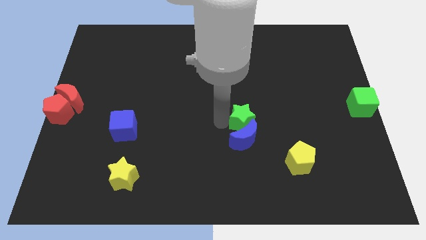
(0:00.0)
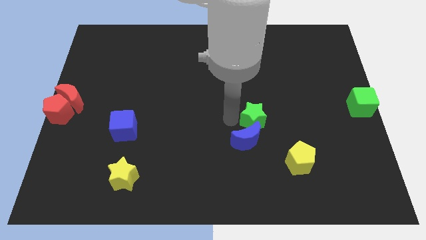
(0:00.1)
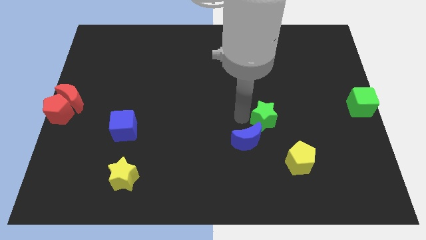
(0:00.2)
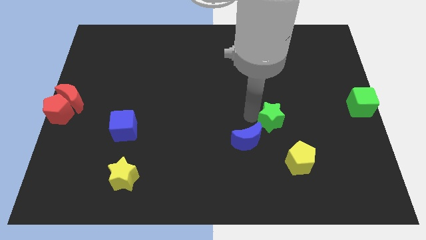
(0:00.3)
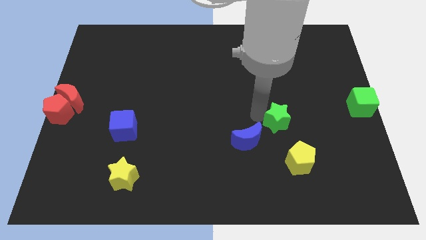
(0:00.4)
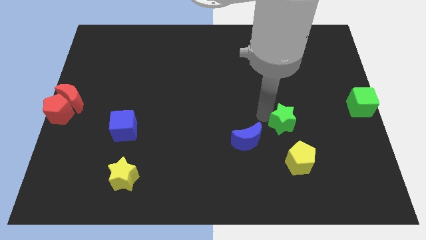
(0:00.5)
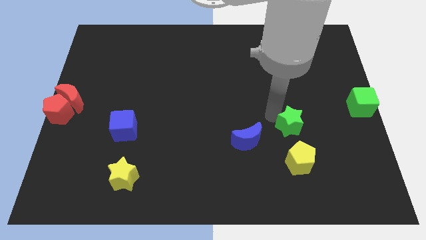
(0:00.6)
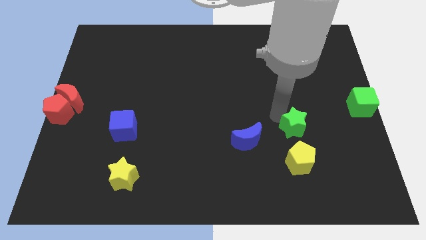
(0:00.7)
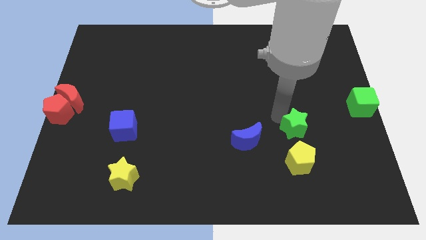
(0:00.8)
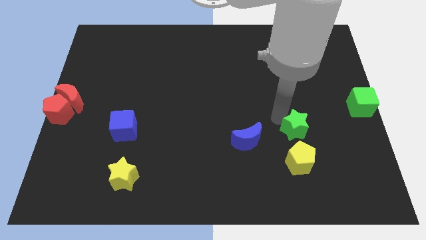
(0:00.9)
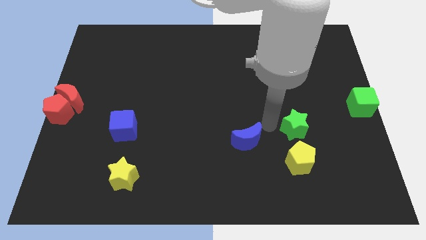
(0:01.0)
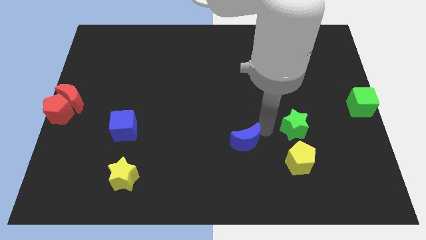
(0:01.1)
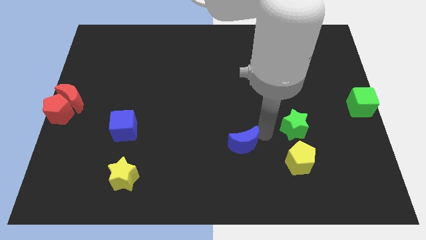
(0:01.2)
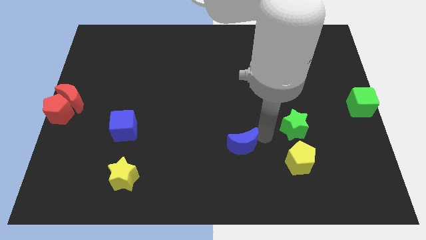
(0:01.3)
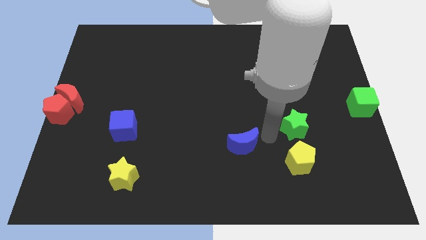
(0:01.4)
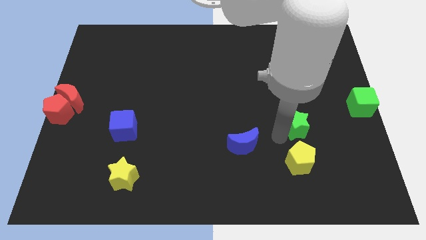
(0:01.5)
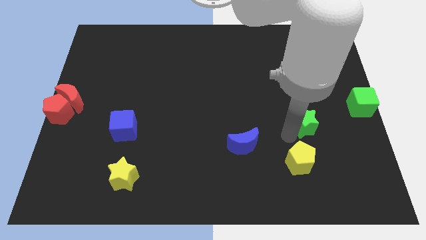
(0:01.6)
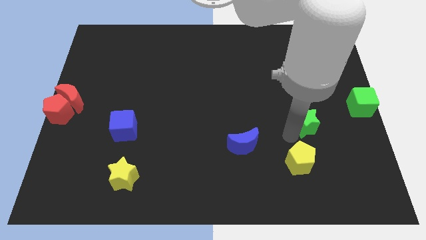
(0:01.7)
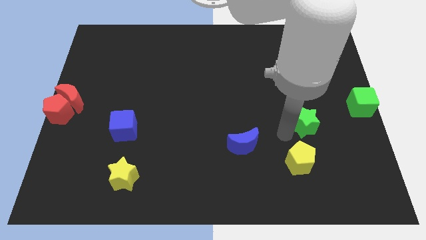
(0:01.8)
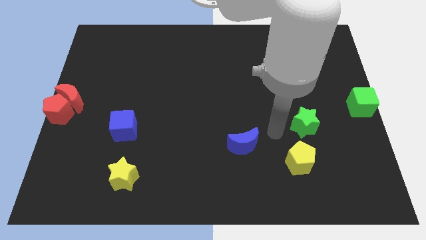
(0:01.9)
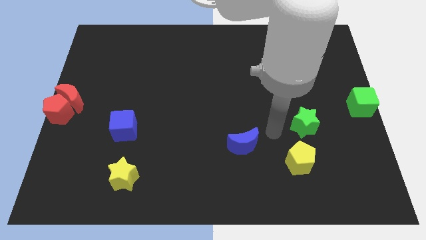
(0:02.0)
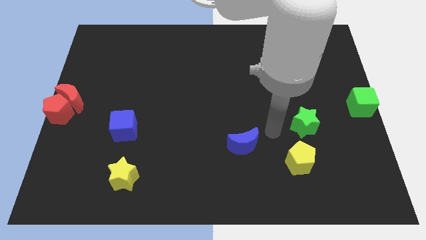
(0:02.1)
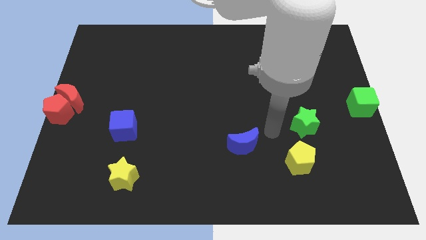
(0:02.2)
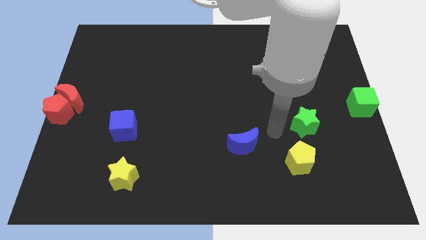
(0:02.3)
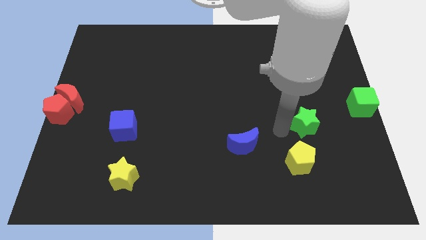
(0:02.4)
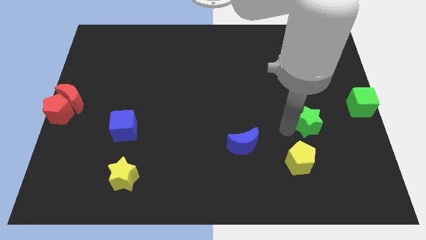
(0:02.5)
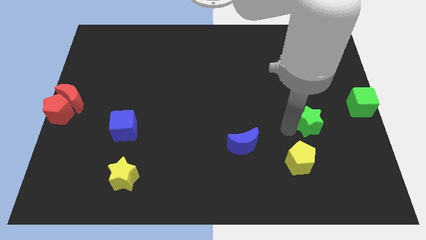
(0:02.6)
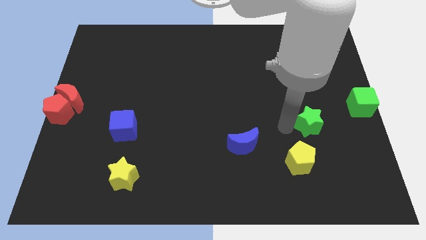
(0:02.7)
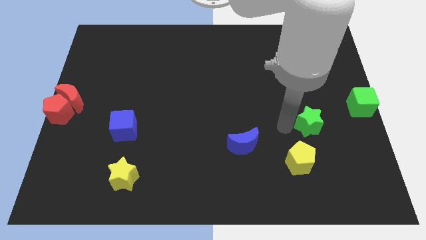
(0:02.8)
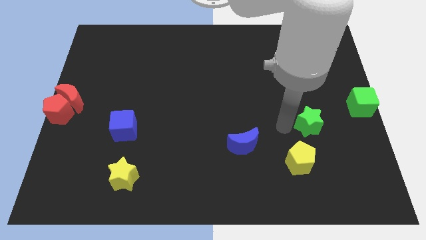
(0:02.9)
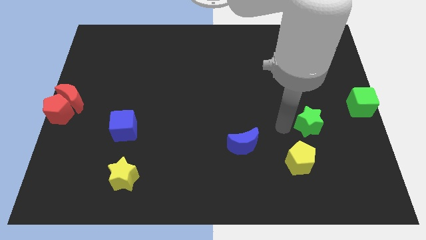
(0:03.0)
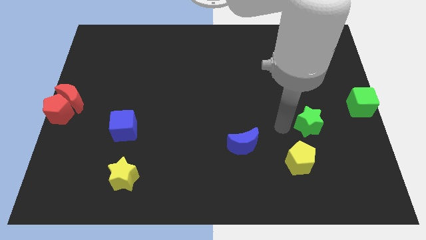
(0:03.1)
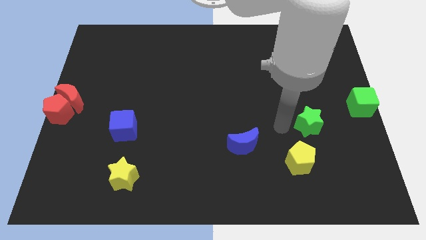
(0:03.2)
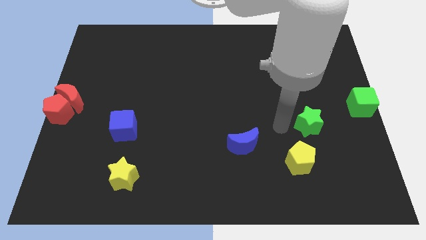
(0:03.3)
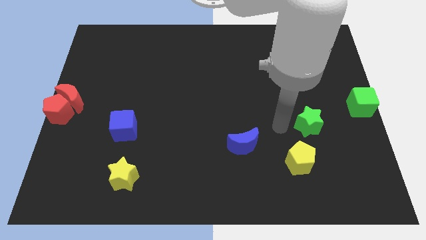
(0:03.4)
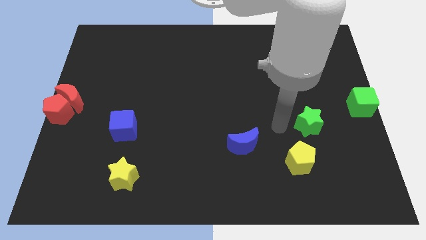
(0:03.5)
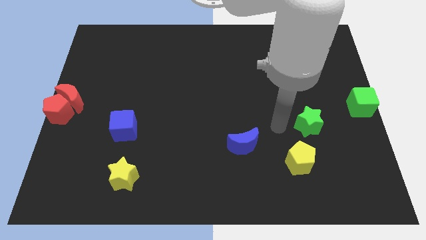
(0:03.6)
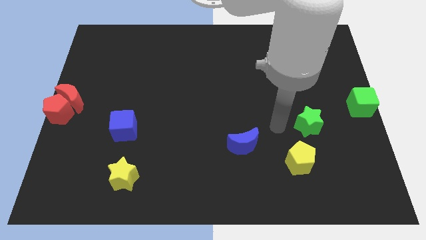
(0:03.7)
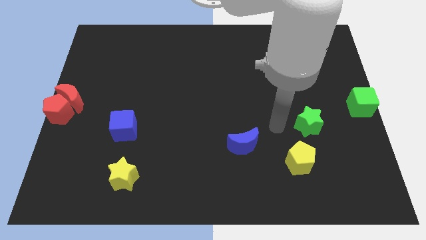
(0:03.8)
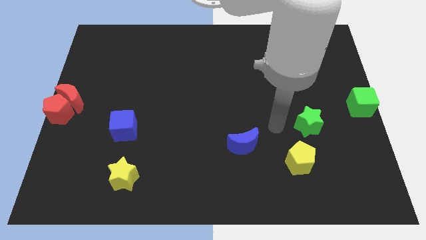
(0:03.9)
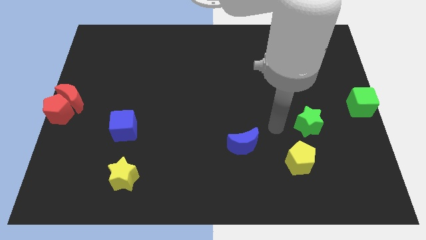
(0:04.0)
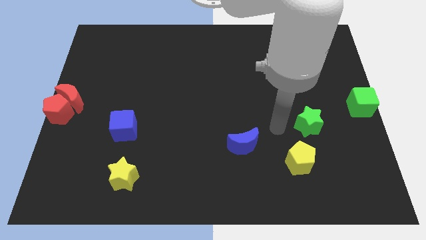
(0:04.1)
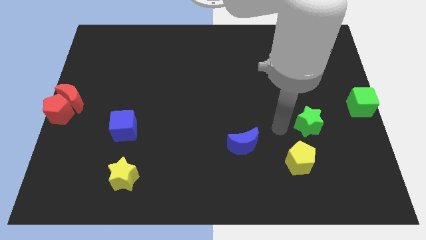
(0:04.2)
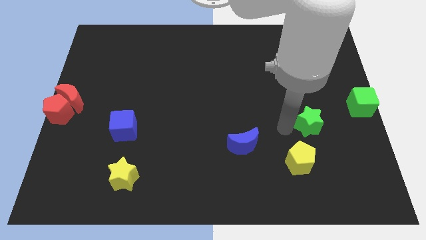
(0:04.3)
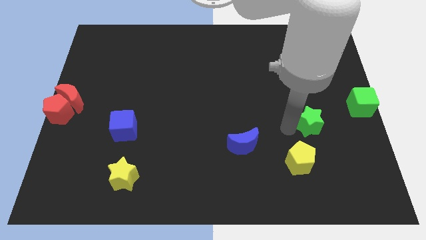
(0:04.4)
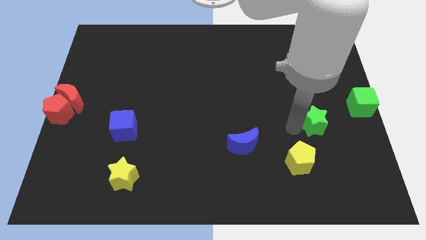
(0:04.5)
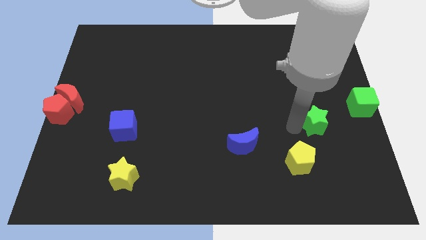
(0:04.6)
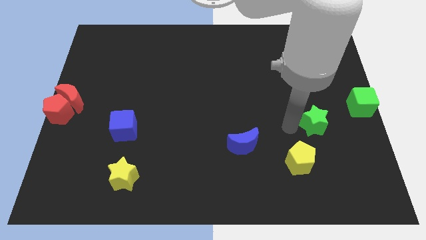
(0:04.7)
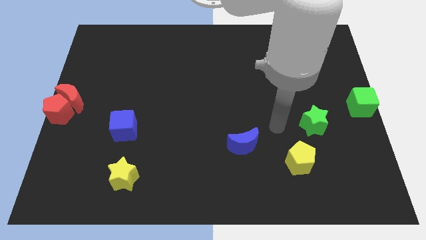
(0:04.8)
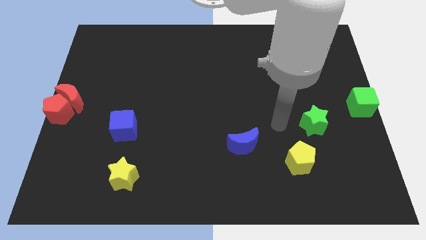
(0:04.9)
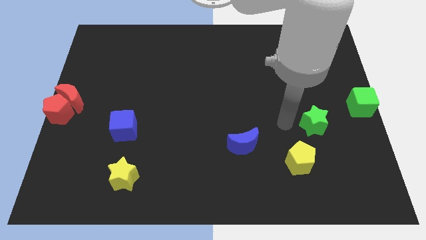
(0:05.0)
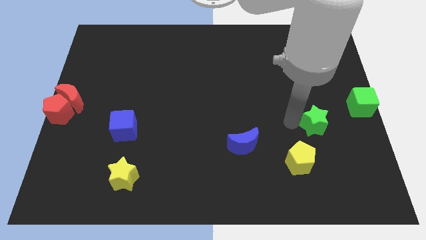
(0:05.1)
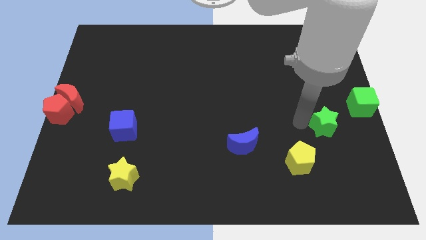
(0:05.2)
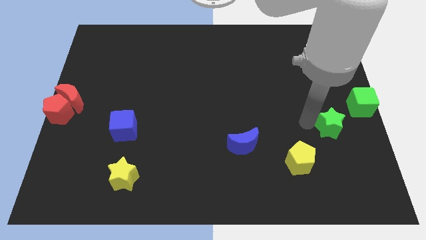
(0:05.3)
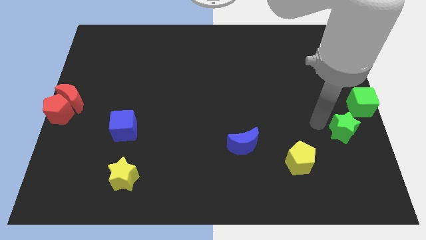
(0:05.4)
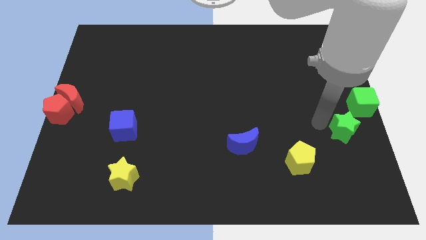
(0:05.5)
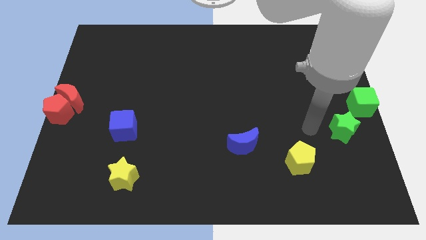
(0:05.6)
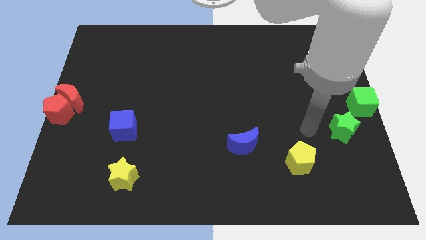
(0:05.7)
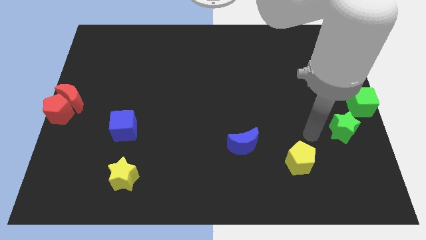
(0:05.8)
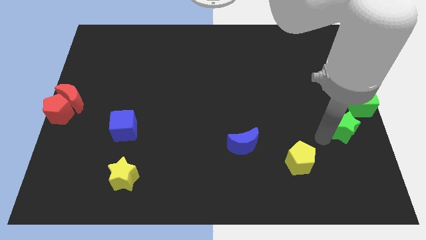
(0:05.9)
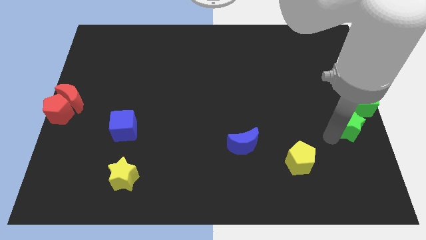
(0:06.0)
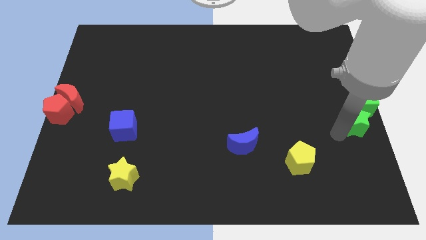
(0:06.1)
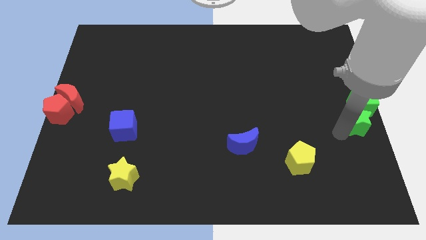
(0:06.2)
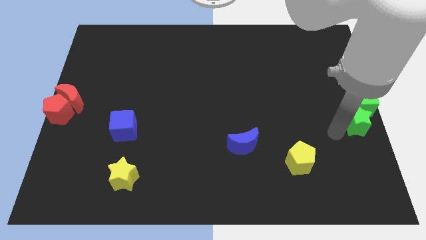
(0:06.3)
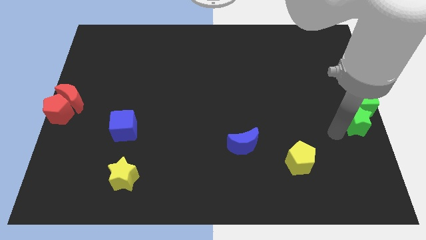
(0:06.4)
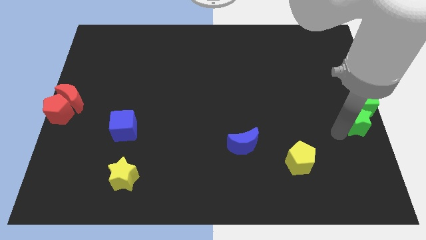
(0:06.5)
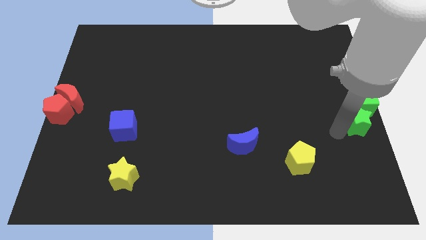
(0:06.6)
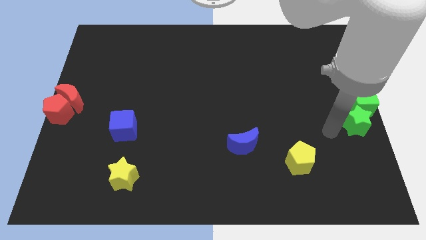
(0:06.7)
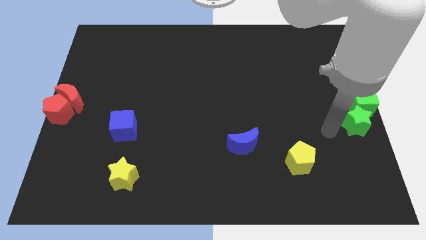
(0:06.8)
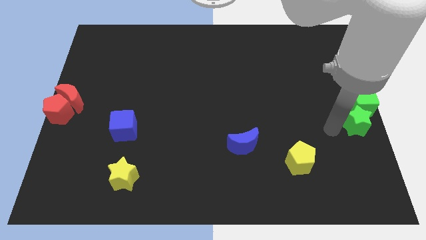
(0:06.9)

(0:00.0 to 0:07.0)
slide the green star close to the green cube

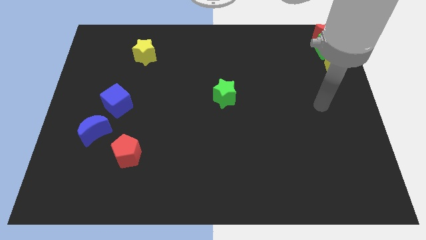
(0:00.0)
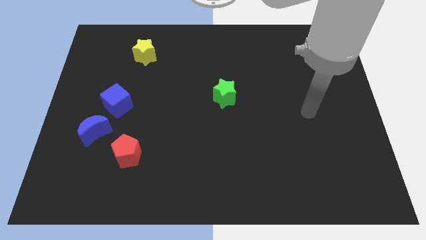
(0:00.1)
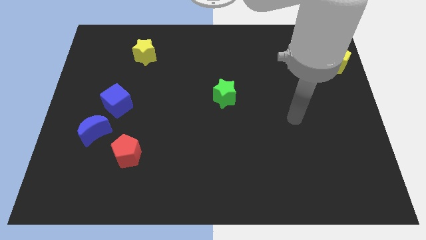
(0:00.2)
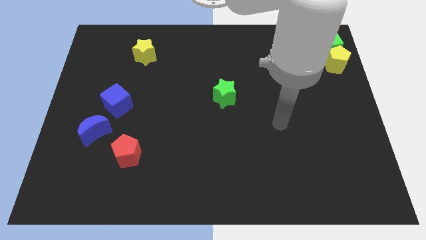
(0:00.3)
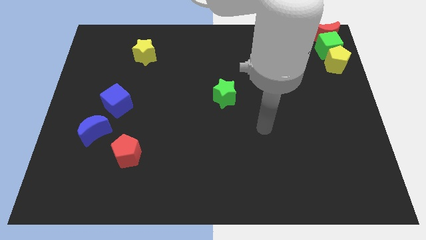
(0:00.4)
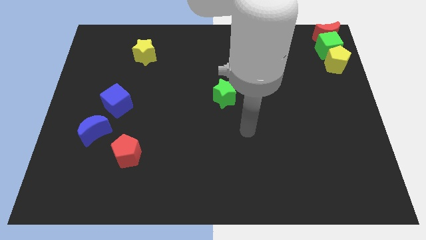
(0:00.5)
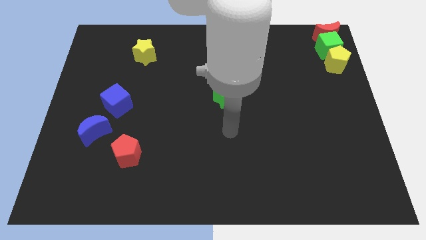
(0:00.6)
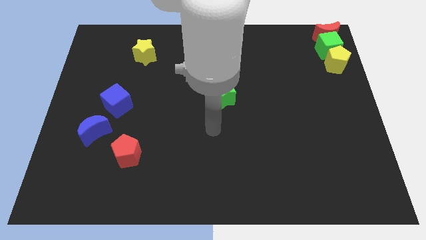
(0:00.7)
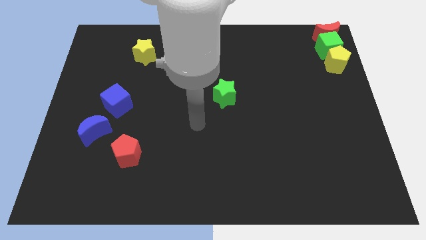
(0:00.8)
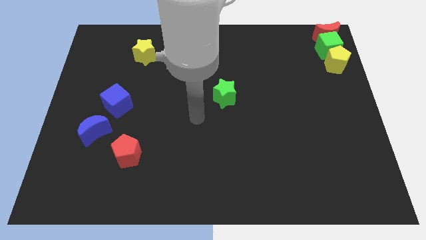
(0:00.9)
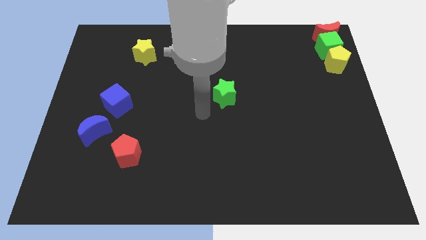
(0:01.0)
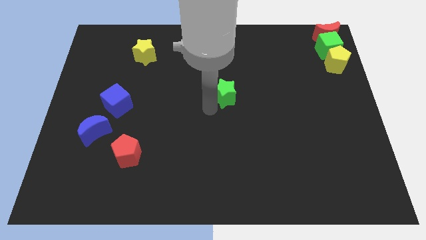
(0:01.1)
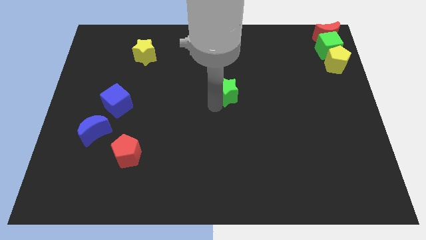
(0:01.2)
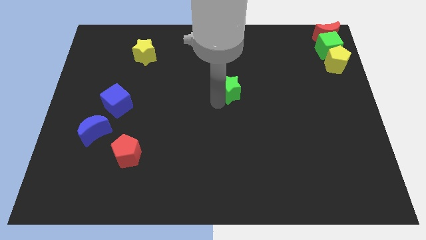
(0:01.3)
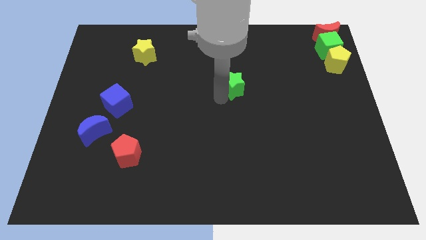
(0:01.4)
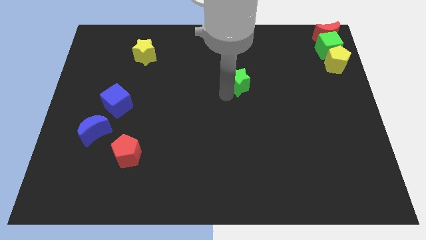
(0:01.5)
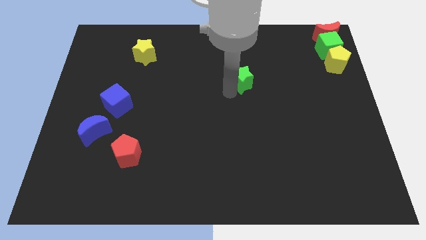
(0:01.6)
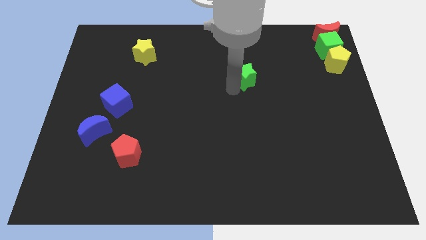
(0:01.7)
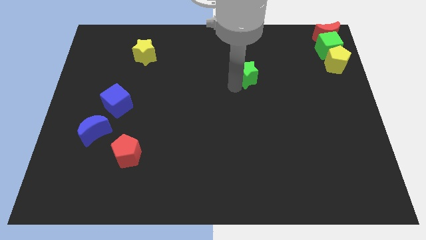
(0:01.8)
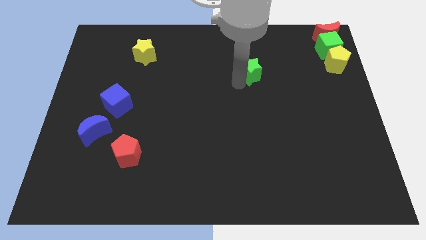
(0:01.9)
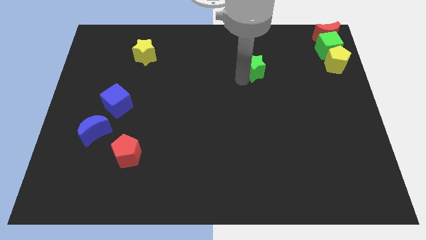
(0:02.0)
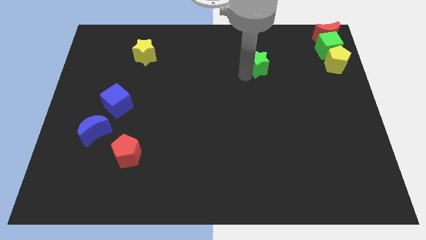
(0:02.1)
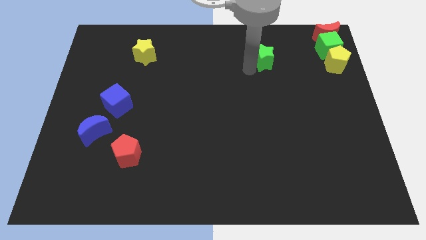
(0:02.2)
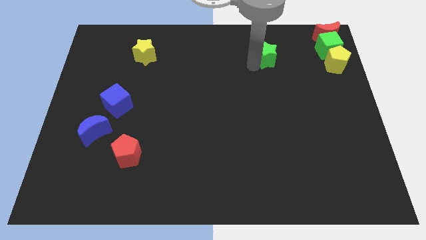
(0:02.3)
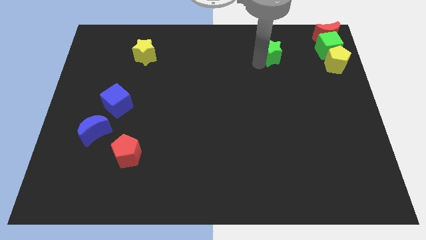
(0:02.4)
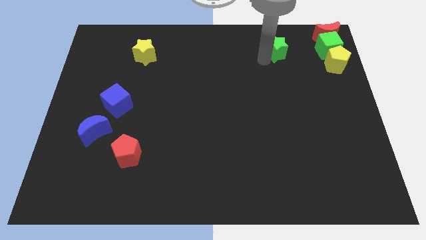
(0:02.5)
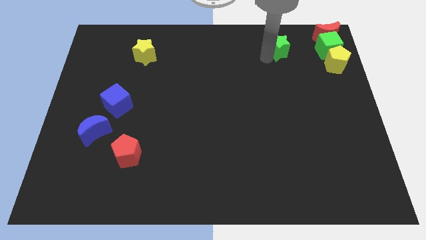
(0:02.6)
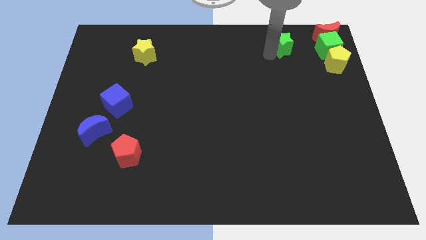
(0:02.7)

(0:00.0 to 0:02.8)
place the green star to the left of the green cube
